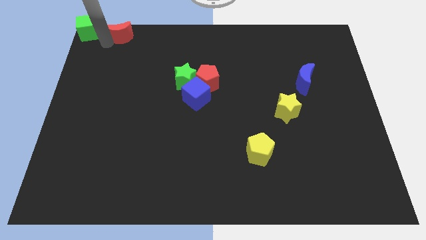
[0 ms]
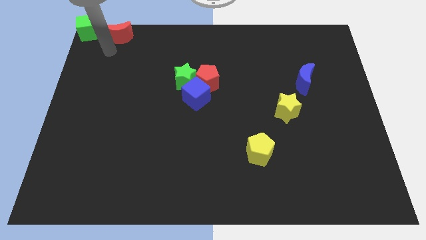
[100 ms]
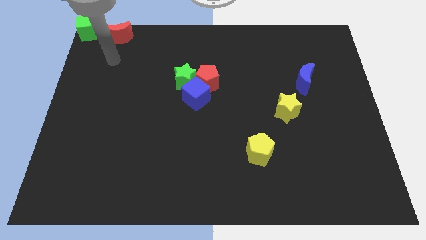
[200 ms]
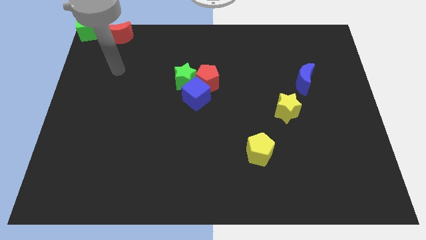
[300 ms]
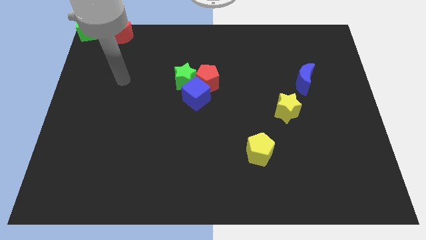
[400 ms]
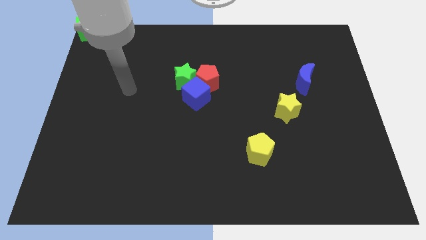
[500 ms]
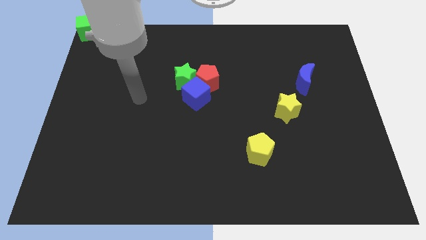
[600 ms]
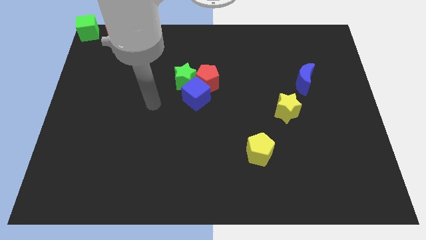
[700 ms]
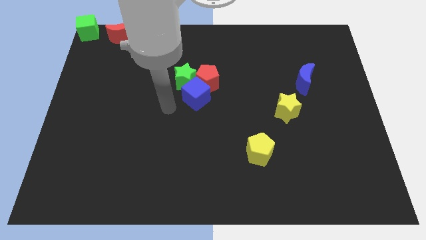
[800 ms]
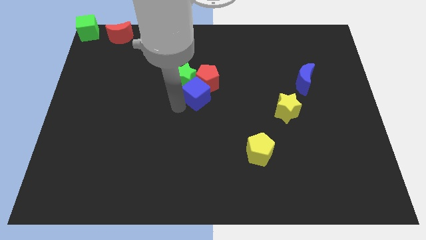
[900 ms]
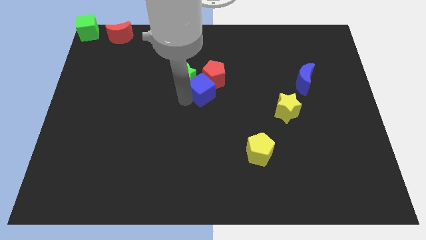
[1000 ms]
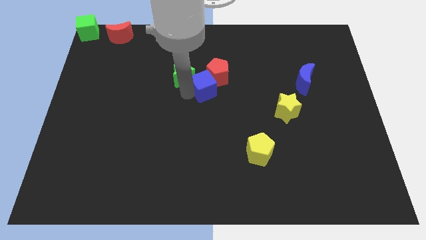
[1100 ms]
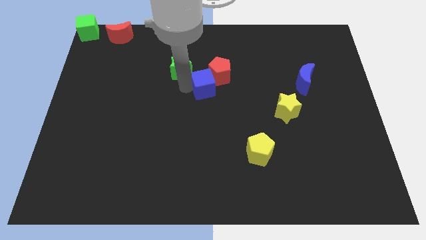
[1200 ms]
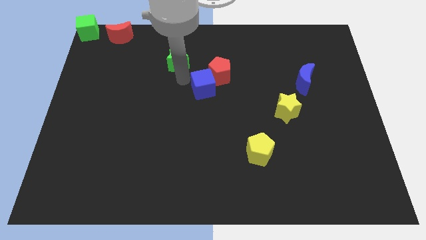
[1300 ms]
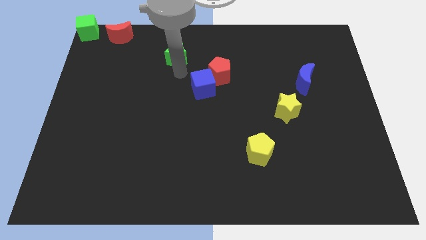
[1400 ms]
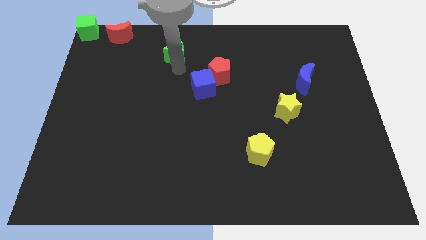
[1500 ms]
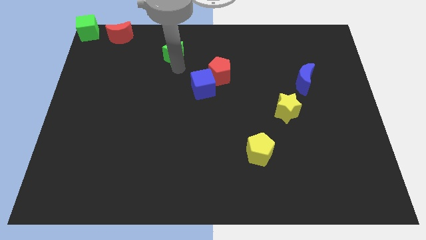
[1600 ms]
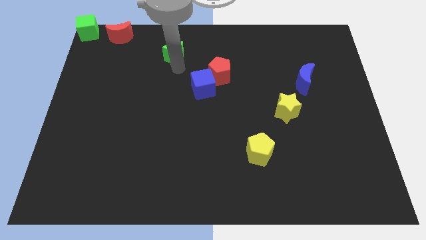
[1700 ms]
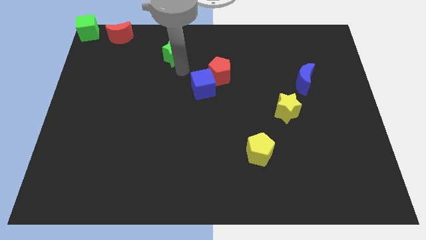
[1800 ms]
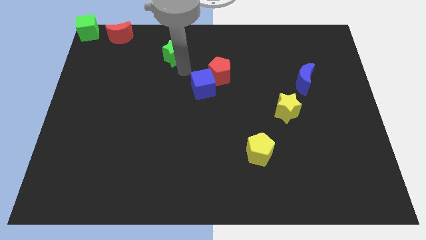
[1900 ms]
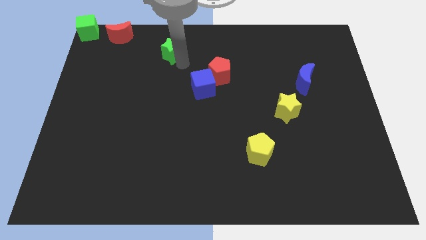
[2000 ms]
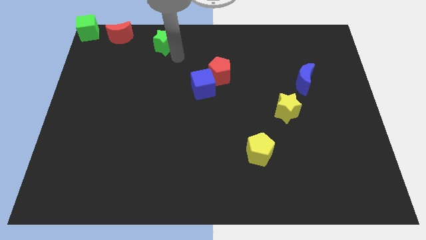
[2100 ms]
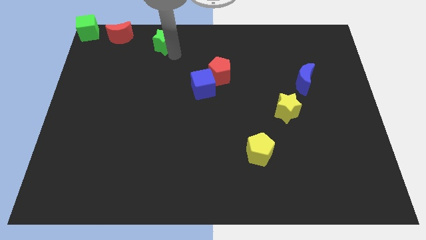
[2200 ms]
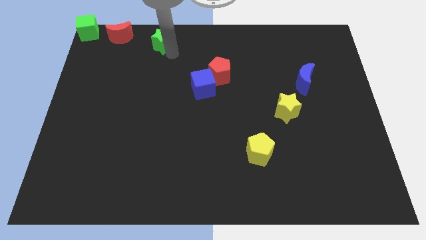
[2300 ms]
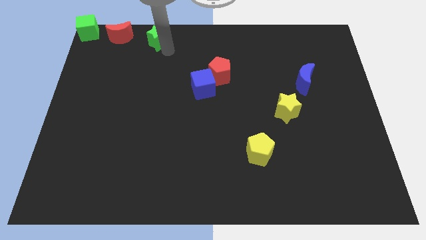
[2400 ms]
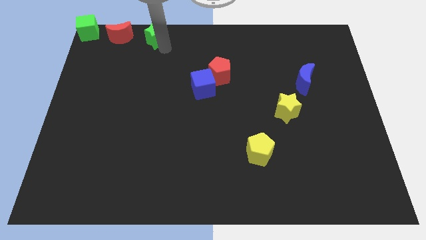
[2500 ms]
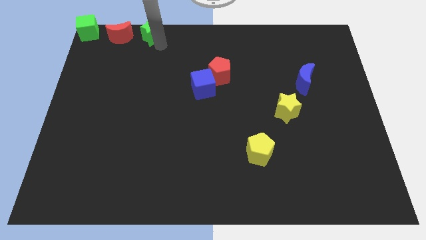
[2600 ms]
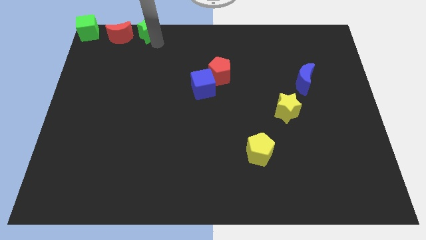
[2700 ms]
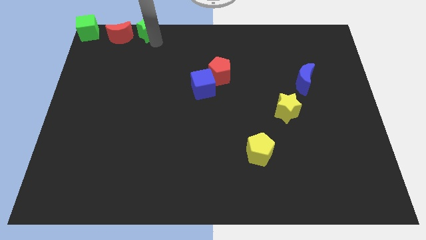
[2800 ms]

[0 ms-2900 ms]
place the green star to the right side of the red crescent

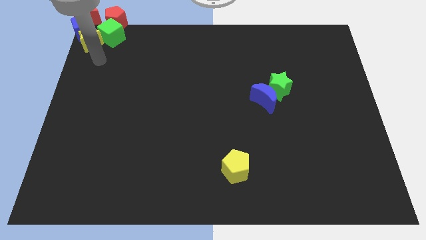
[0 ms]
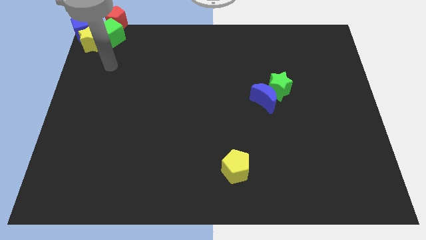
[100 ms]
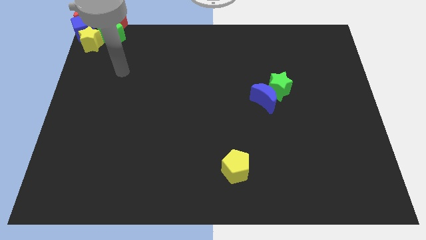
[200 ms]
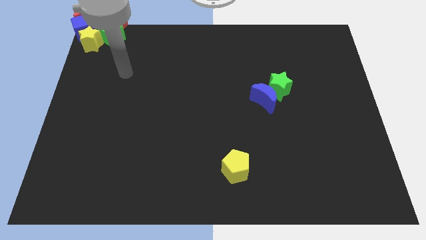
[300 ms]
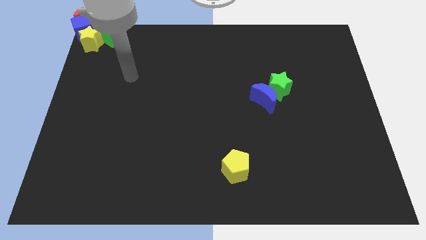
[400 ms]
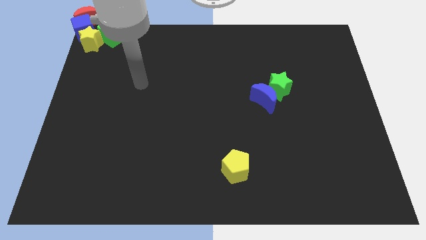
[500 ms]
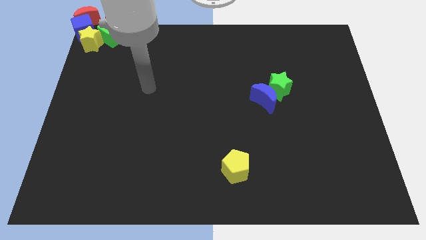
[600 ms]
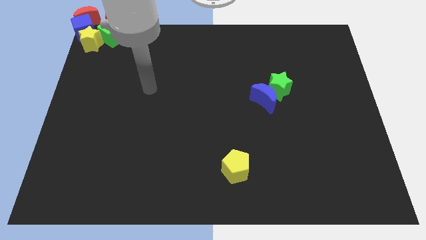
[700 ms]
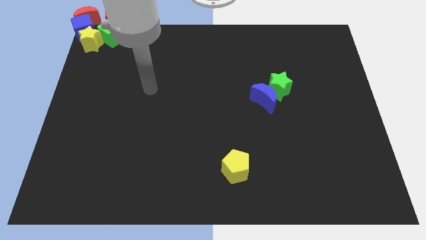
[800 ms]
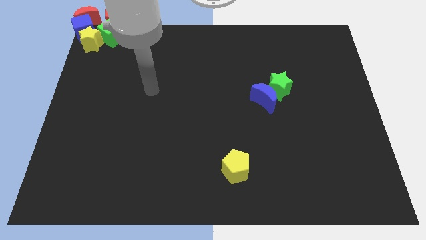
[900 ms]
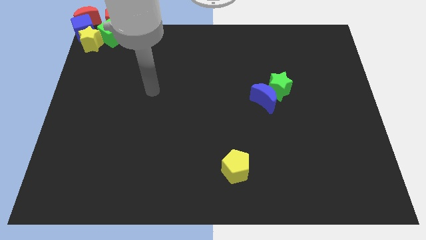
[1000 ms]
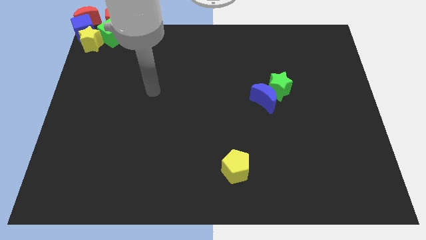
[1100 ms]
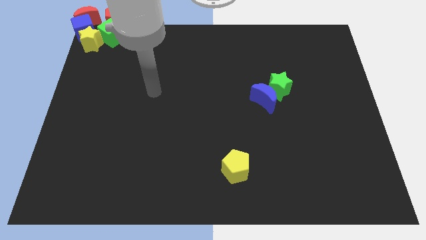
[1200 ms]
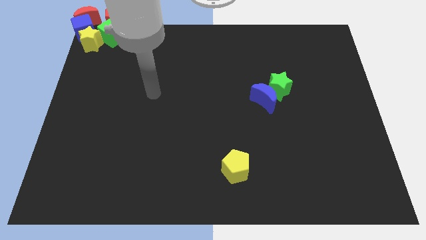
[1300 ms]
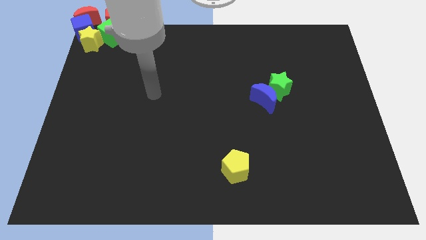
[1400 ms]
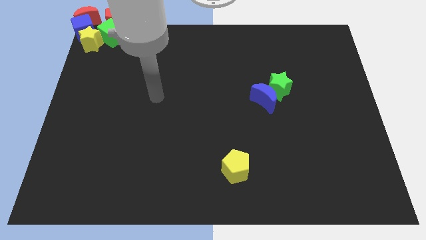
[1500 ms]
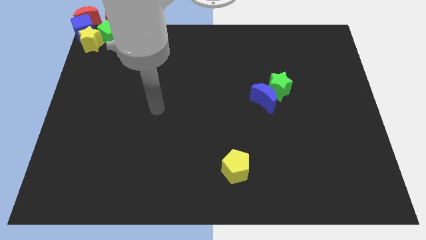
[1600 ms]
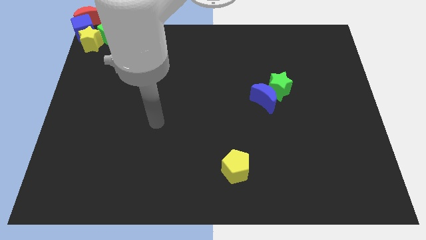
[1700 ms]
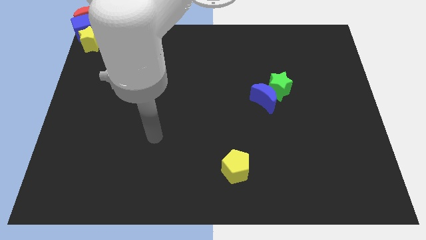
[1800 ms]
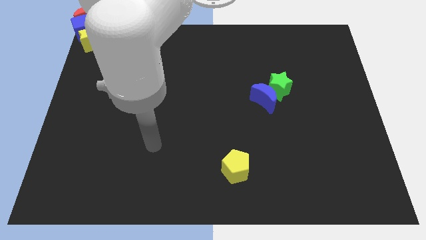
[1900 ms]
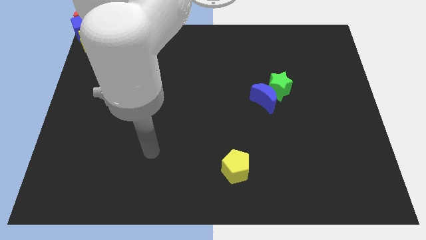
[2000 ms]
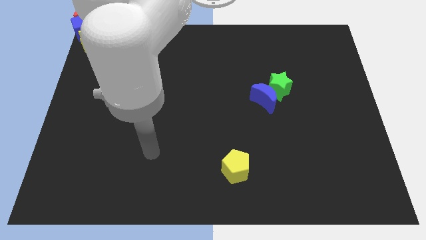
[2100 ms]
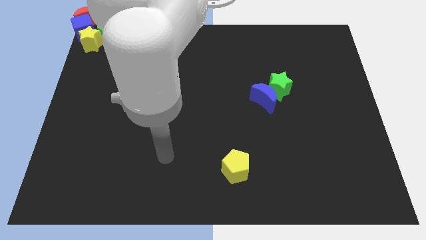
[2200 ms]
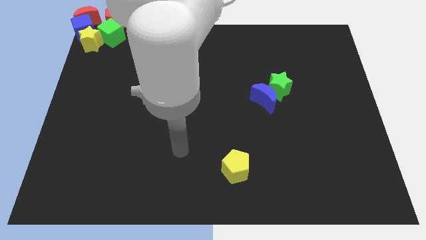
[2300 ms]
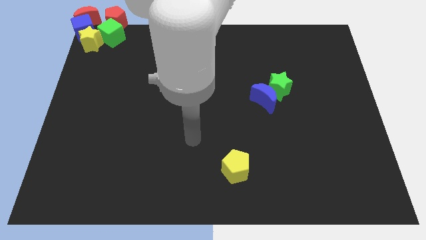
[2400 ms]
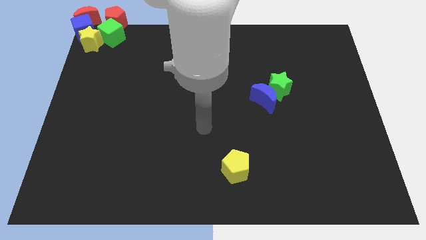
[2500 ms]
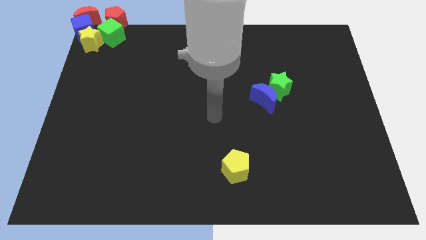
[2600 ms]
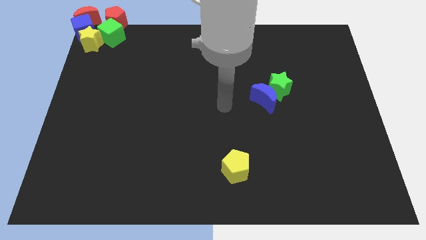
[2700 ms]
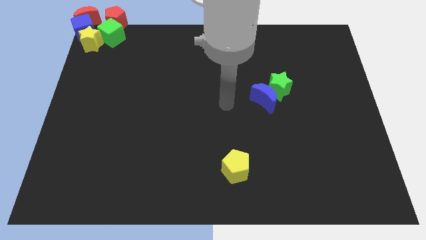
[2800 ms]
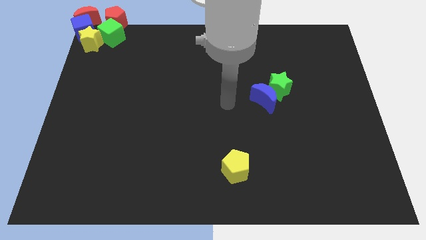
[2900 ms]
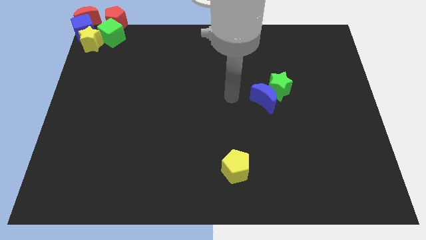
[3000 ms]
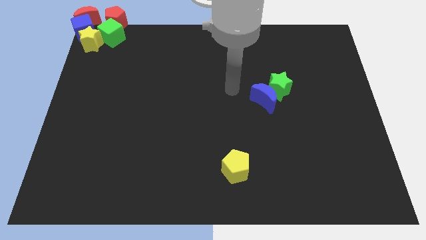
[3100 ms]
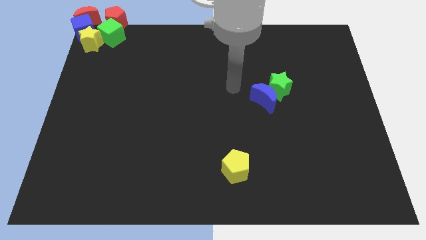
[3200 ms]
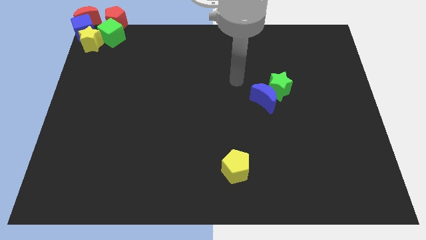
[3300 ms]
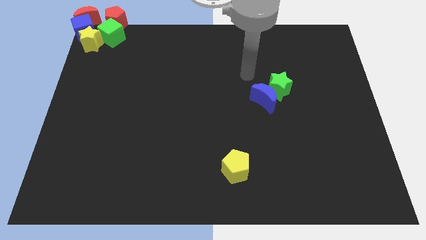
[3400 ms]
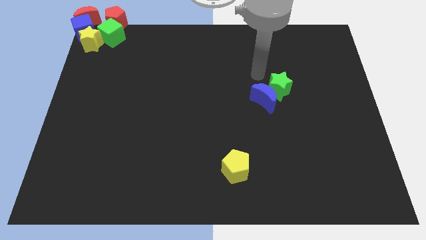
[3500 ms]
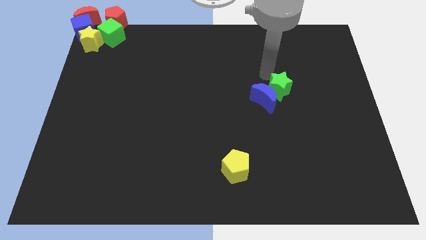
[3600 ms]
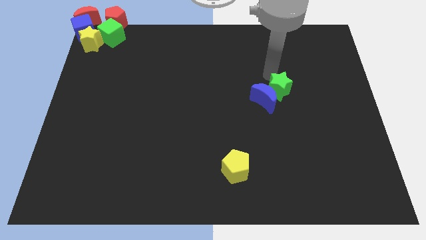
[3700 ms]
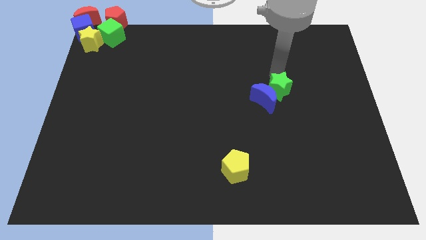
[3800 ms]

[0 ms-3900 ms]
move your arm to the top side of the green star

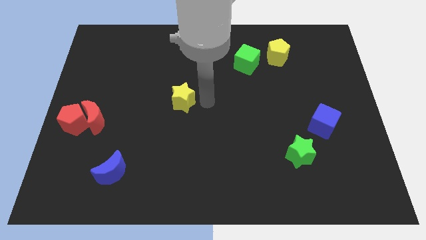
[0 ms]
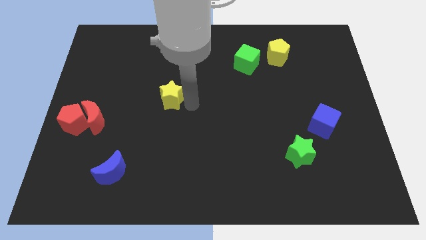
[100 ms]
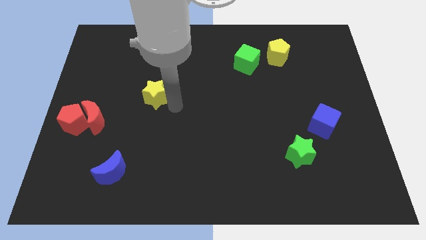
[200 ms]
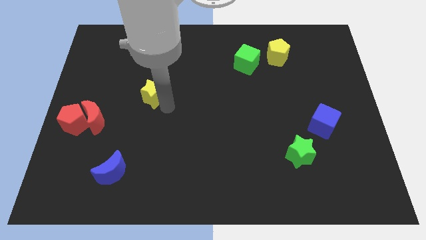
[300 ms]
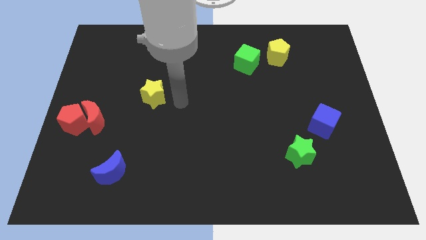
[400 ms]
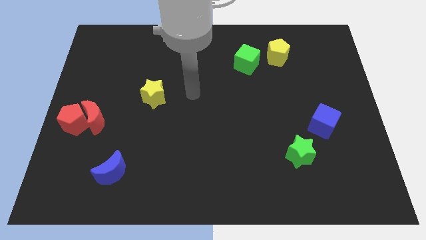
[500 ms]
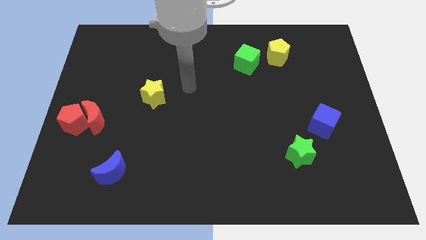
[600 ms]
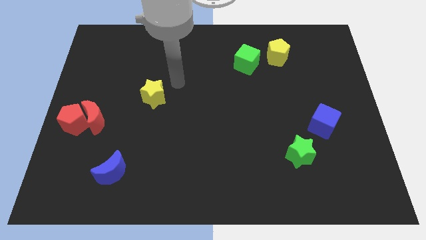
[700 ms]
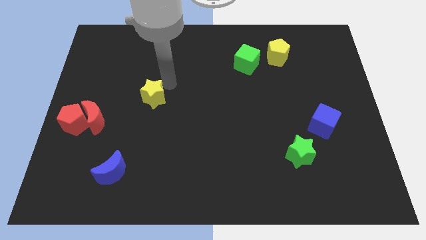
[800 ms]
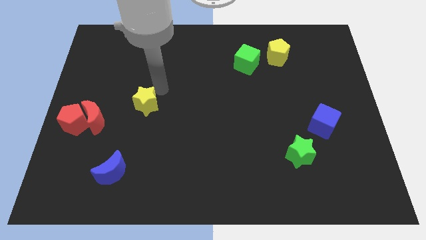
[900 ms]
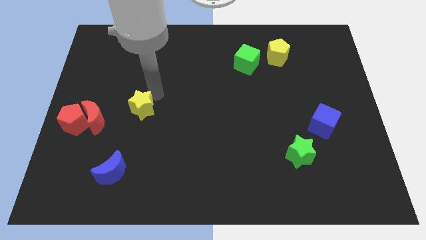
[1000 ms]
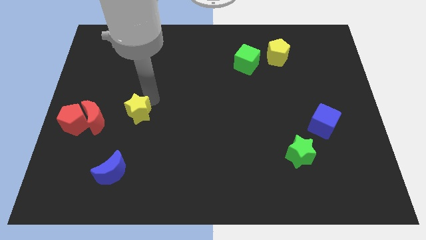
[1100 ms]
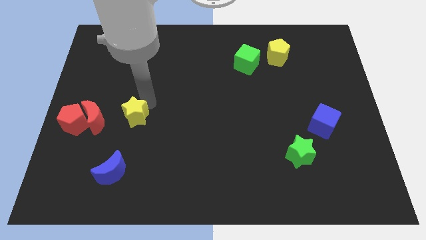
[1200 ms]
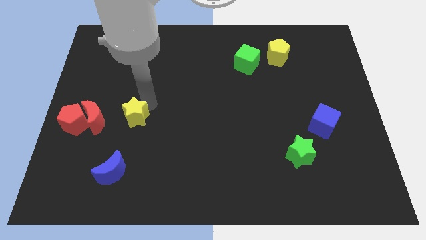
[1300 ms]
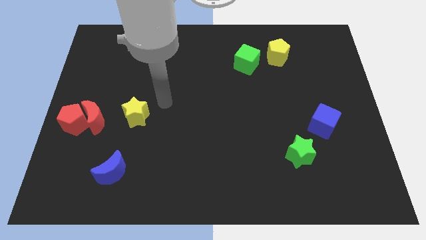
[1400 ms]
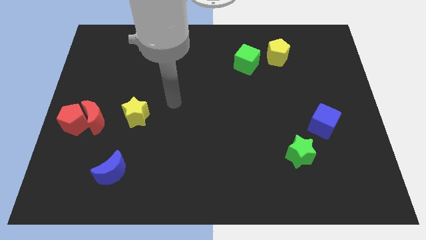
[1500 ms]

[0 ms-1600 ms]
push the yellow star close right to the red crescent

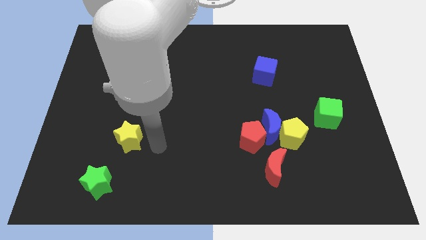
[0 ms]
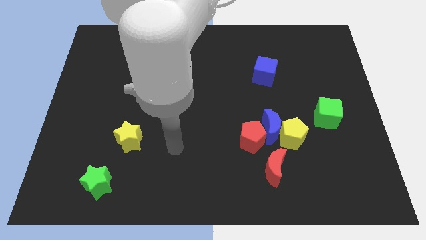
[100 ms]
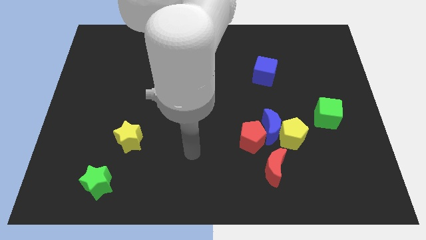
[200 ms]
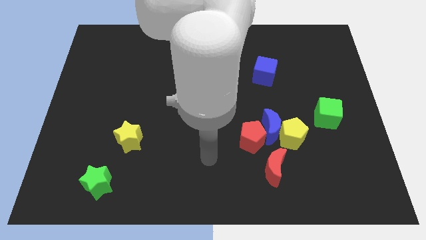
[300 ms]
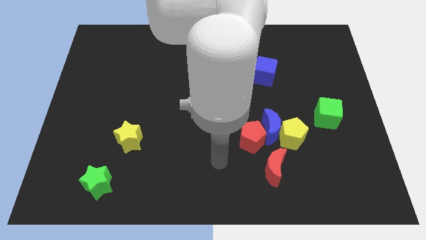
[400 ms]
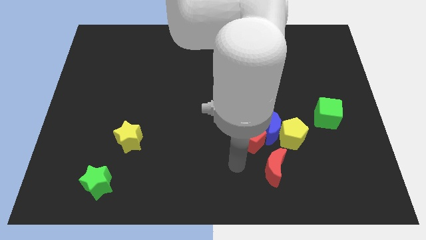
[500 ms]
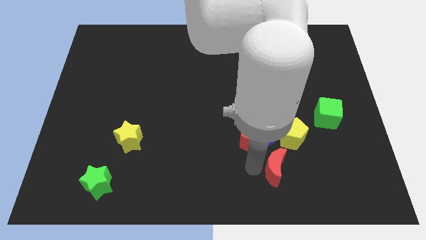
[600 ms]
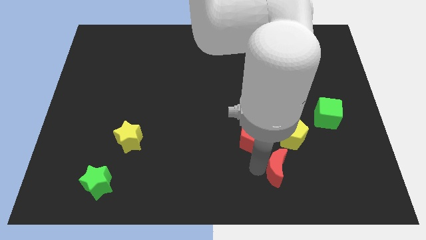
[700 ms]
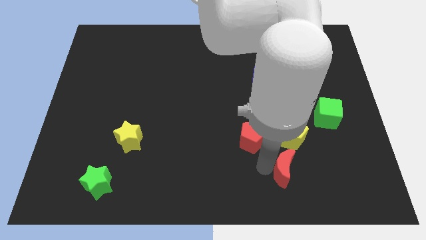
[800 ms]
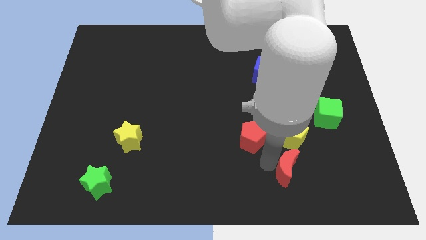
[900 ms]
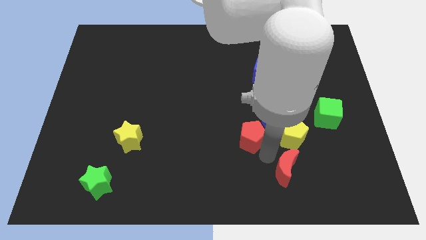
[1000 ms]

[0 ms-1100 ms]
push the red crescent slightly to the right
